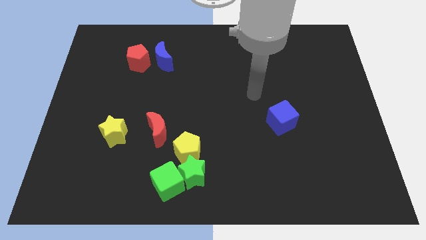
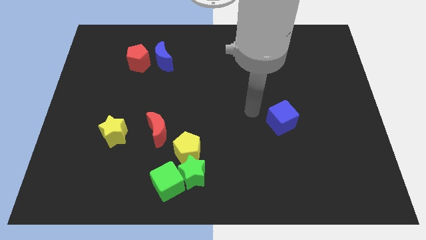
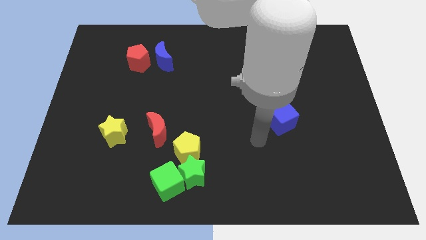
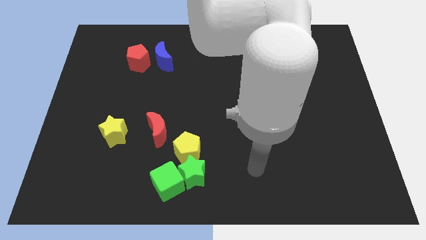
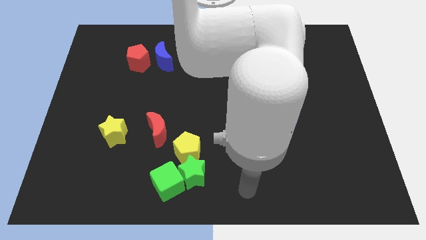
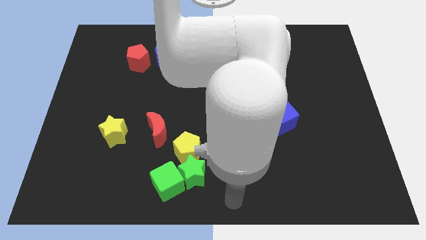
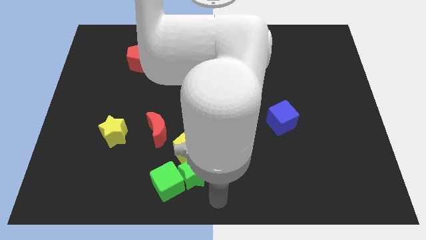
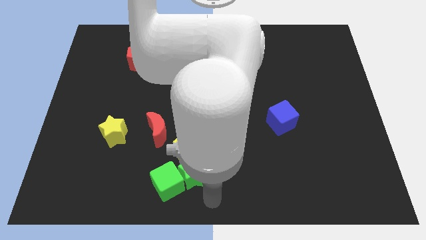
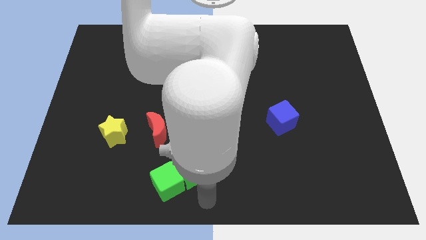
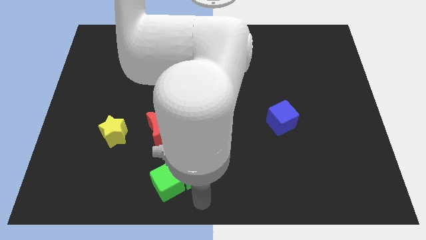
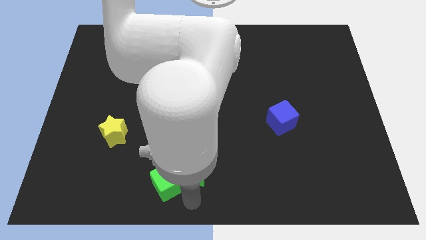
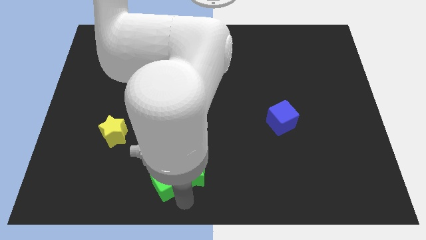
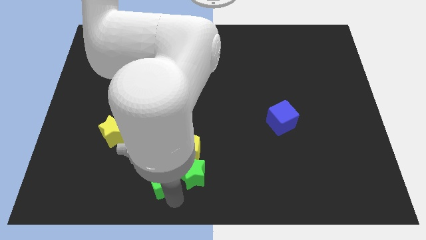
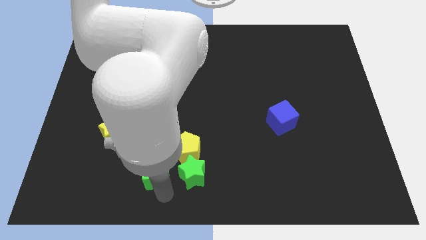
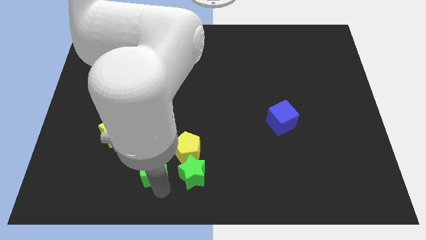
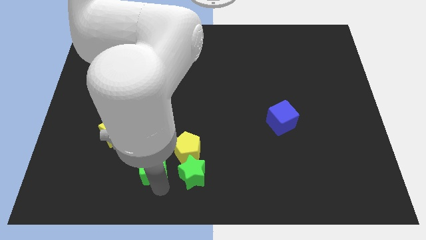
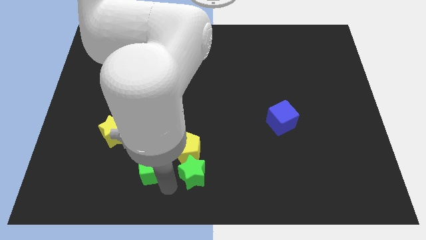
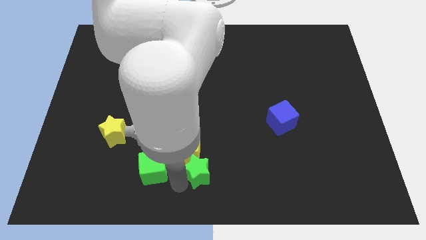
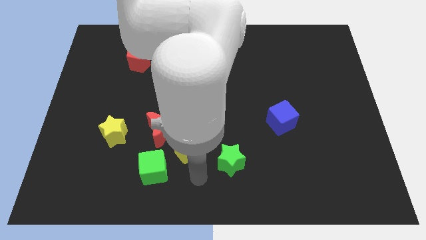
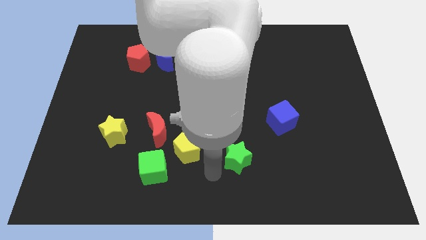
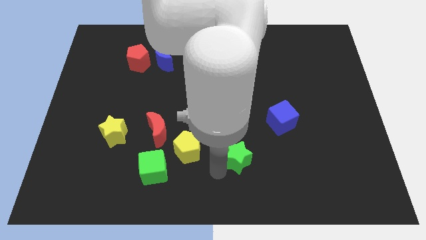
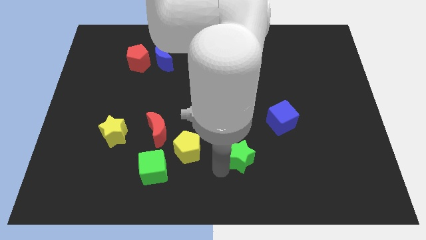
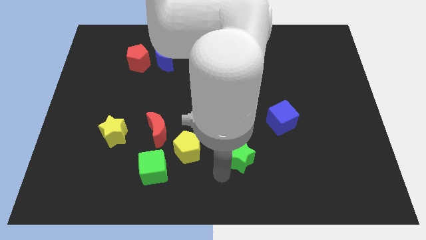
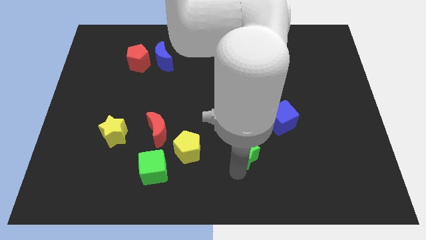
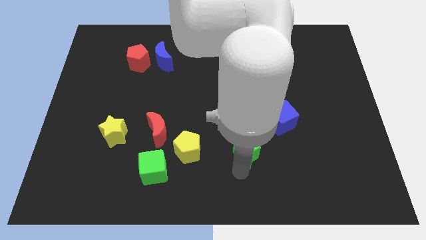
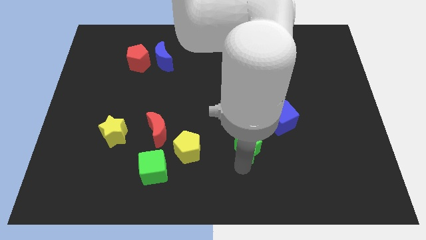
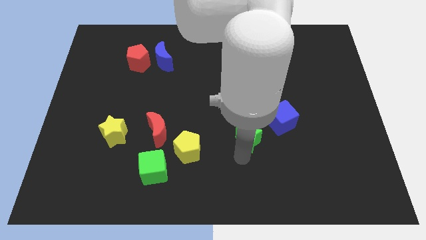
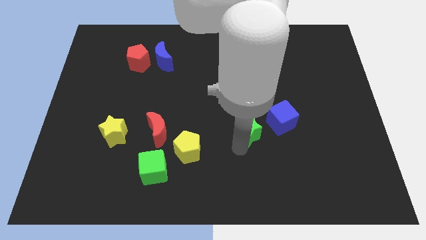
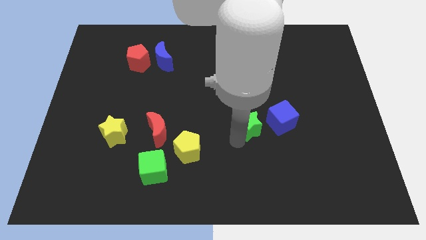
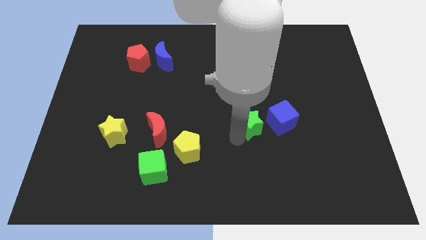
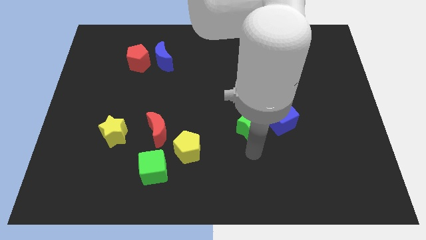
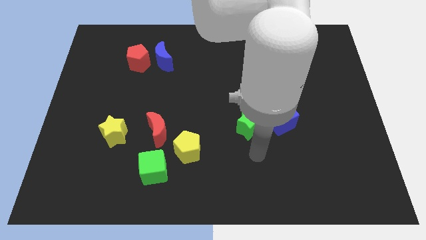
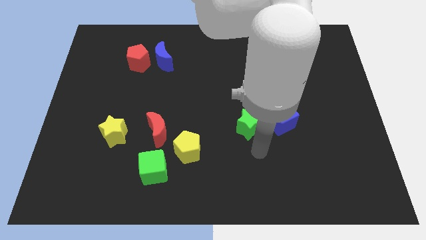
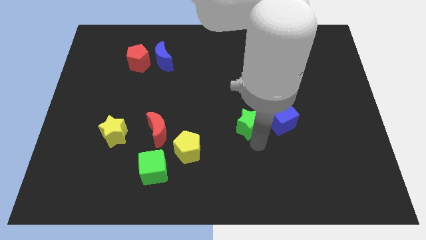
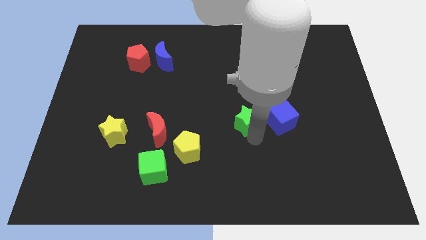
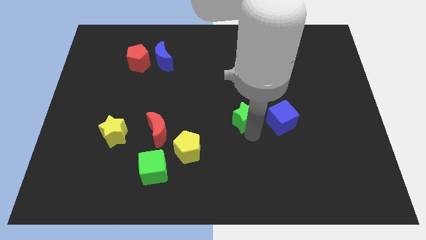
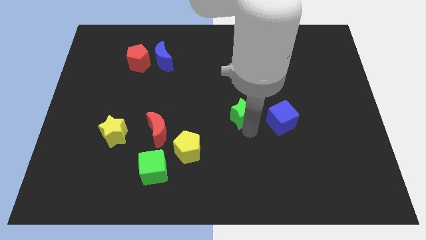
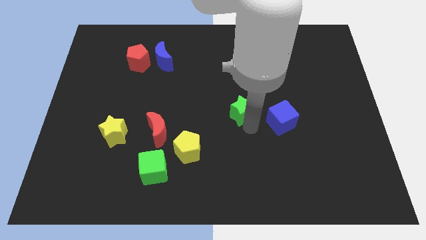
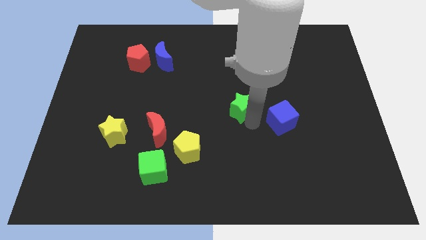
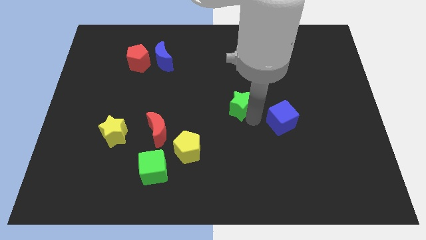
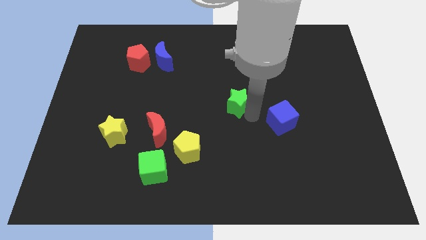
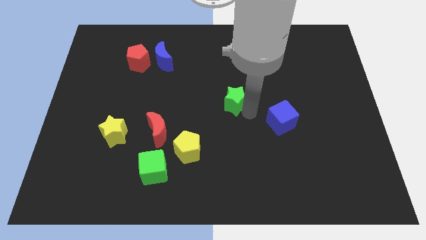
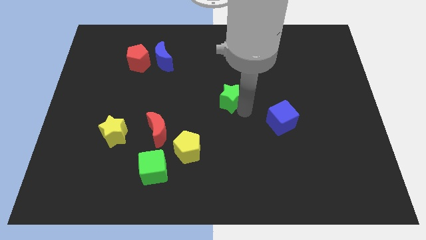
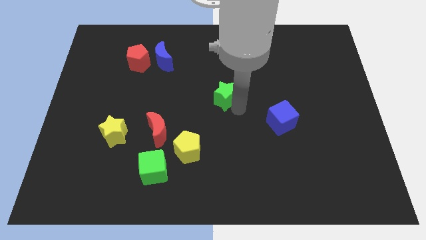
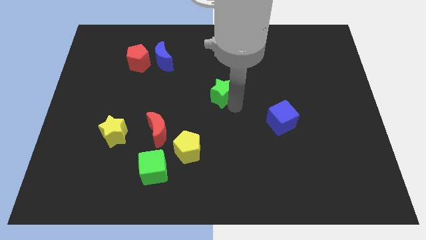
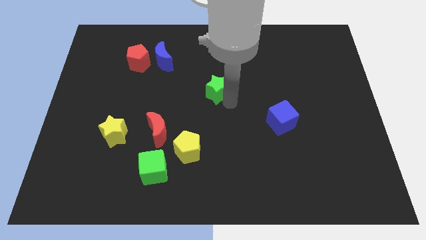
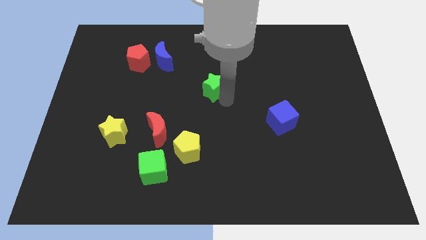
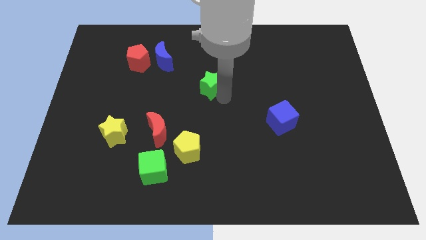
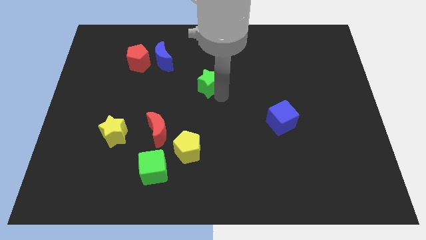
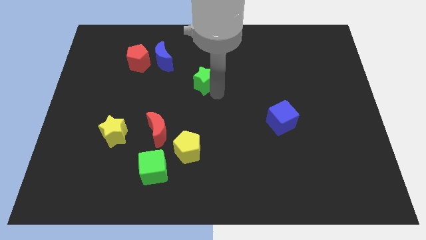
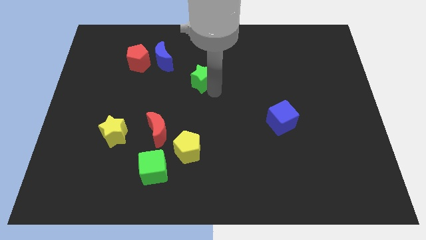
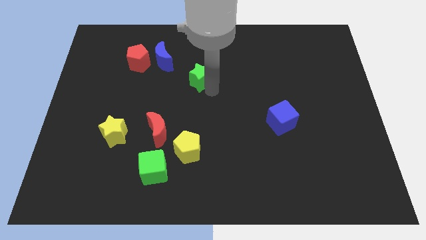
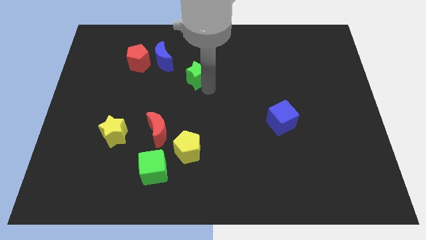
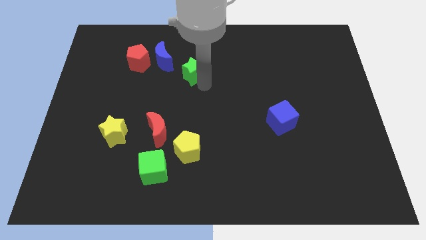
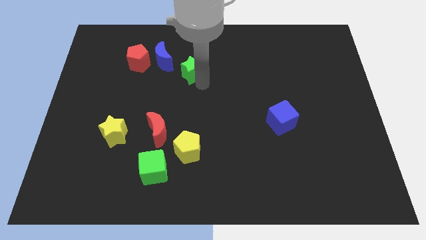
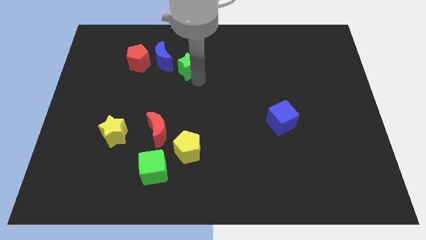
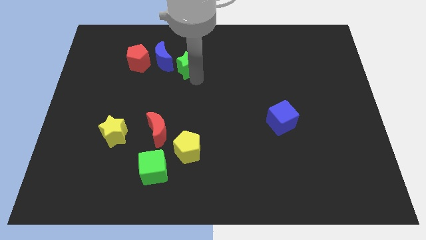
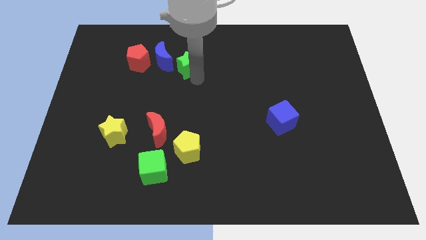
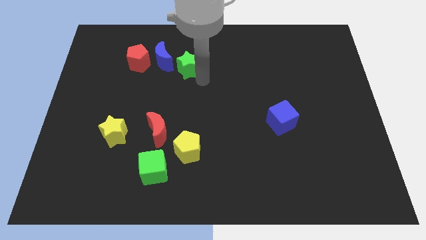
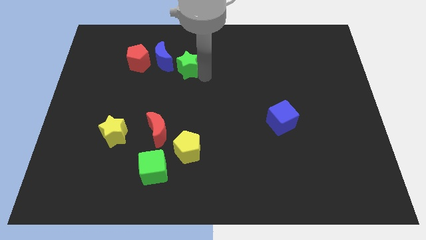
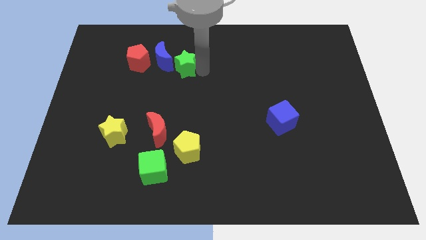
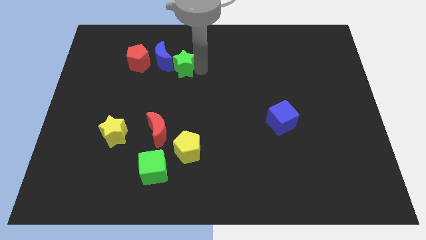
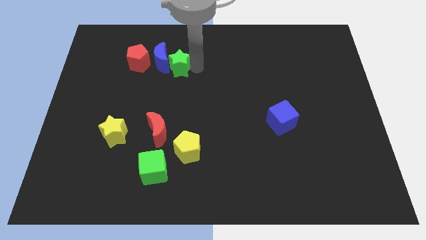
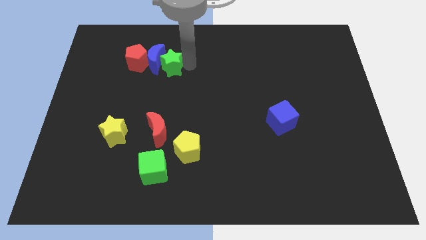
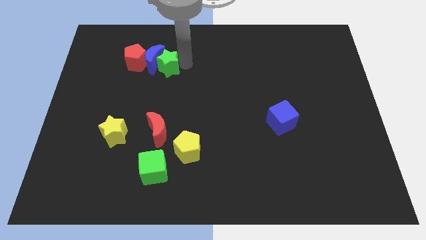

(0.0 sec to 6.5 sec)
put the green star to the blue moon

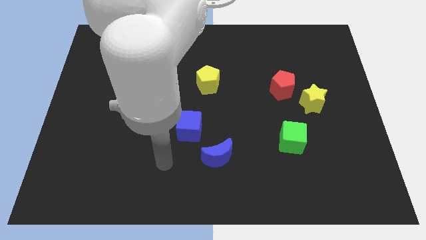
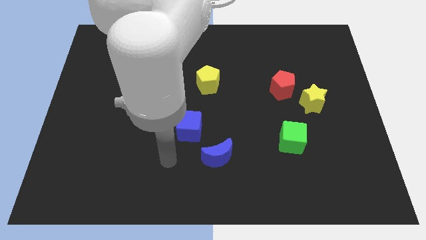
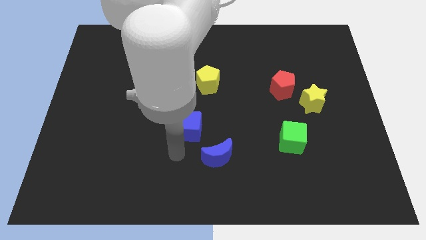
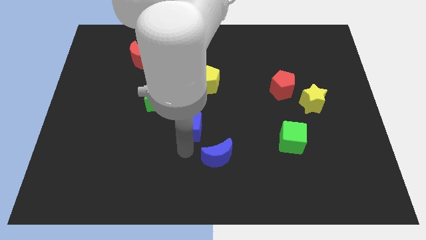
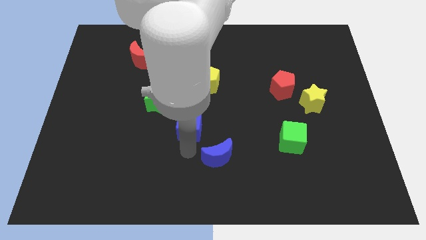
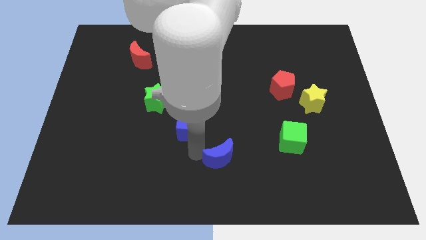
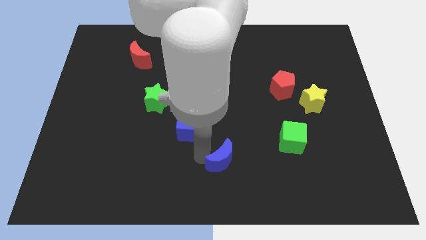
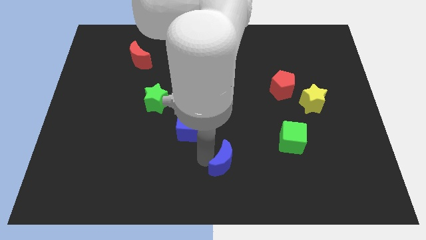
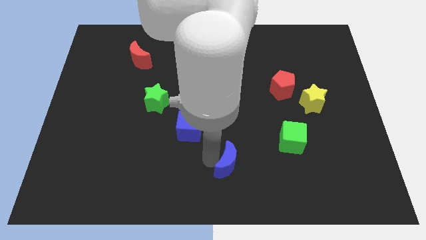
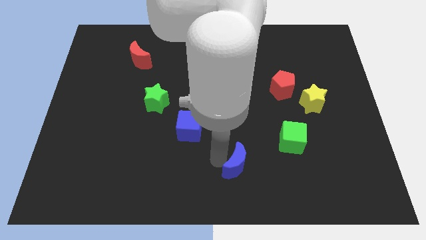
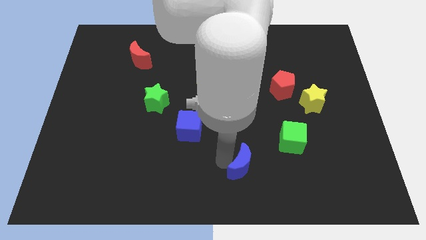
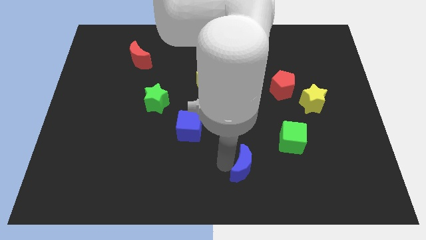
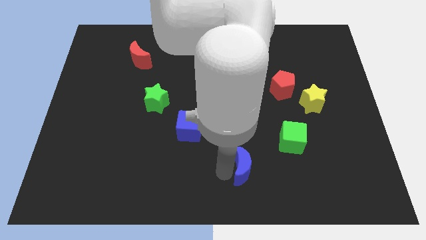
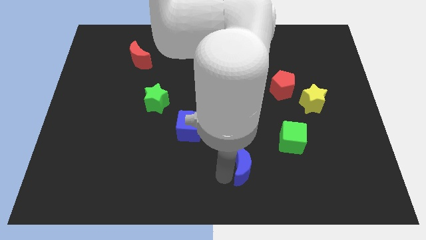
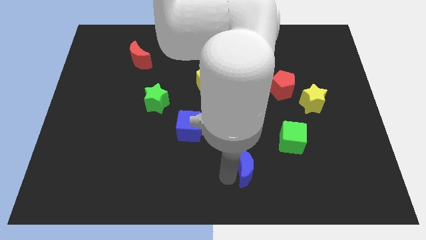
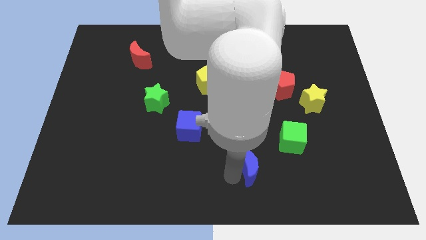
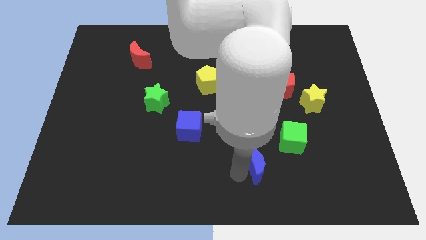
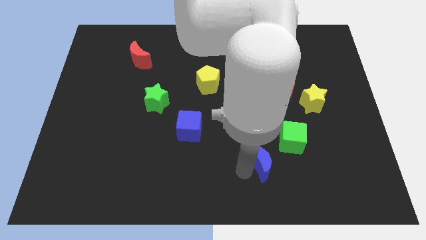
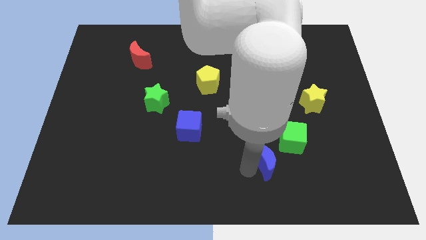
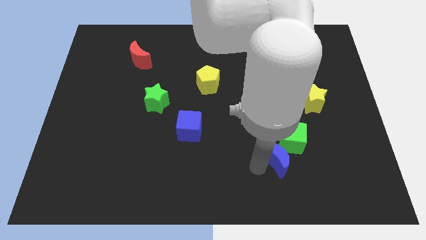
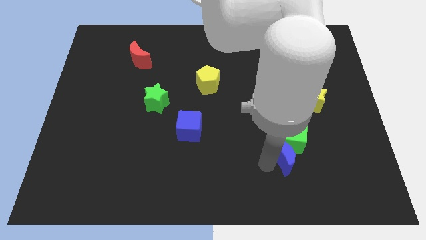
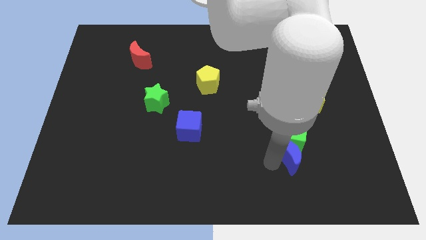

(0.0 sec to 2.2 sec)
put the blue moon close to the green cube
